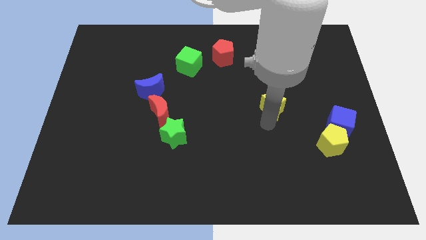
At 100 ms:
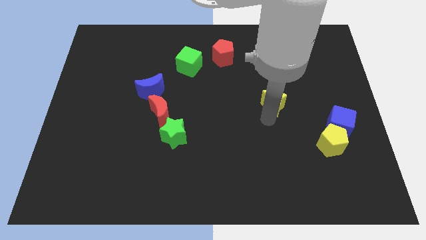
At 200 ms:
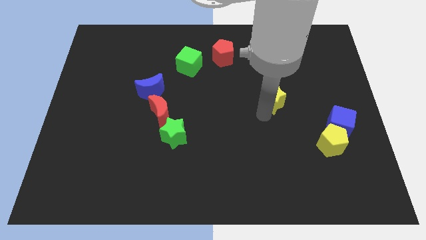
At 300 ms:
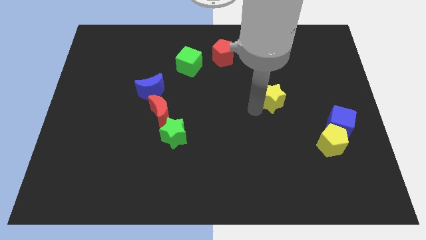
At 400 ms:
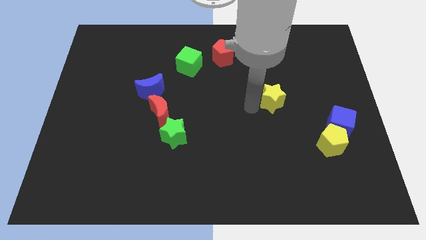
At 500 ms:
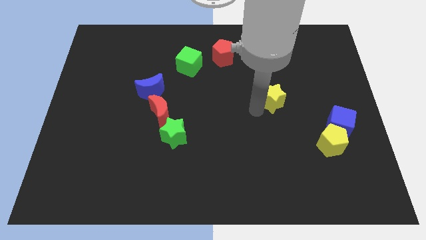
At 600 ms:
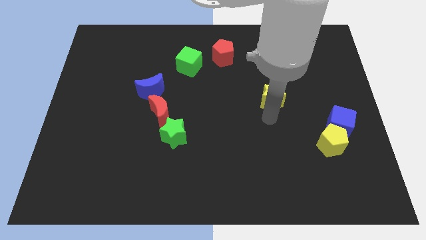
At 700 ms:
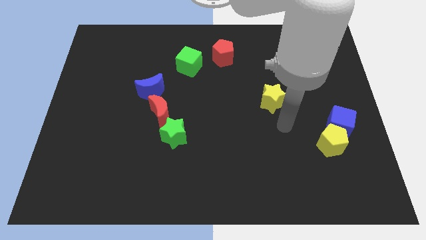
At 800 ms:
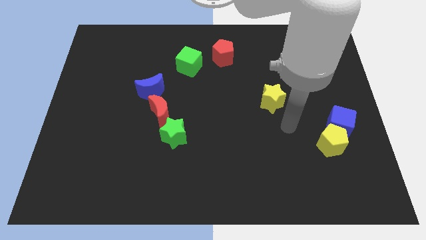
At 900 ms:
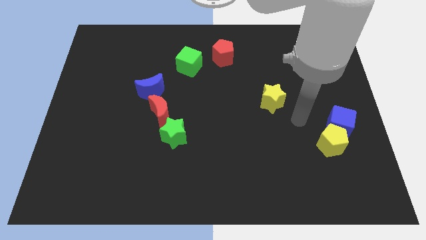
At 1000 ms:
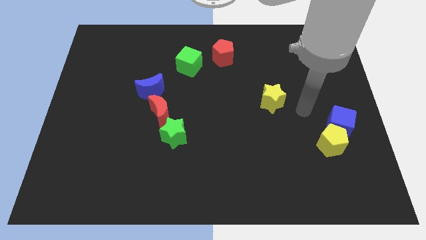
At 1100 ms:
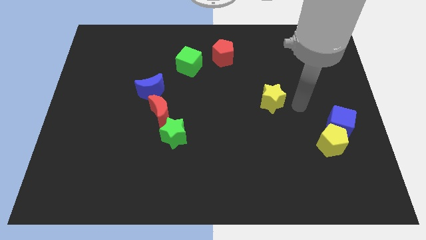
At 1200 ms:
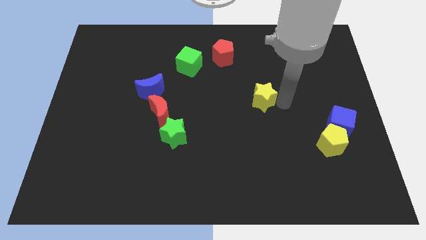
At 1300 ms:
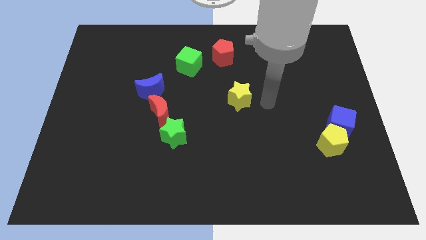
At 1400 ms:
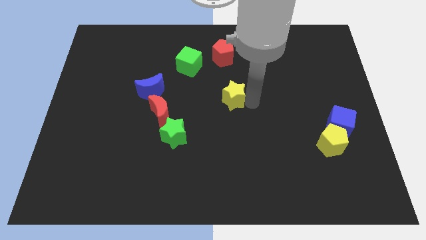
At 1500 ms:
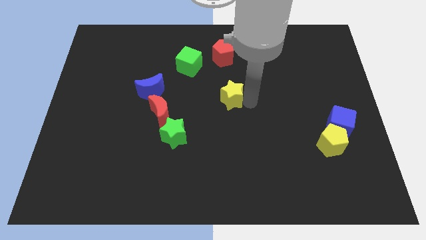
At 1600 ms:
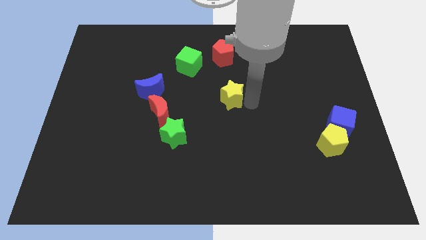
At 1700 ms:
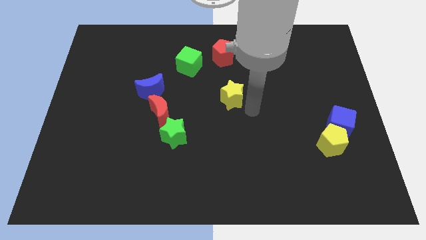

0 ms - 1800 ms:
move the yellow star to the bottom of the red pentagon

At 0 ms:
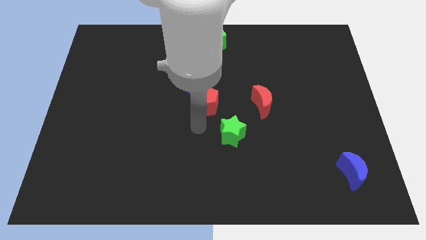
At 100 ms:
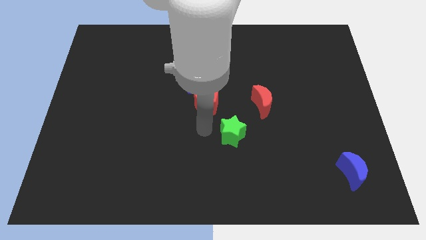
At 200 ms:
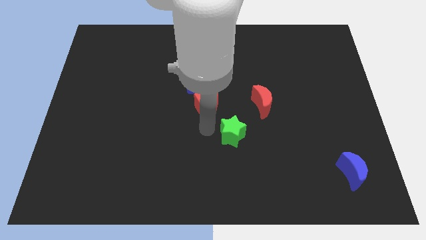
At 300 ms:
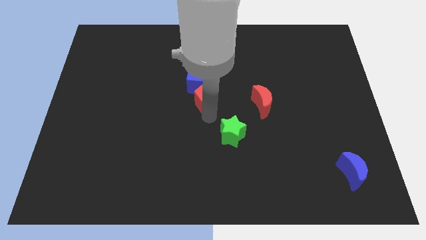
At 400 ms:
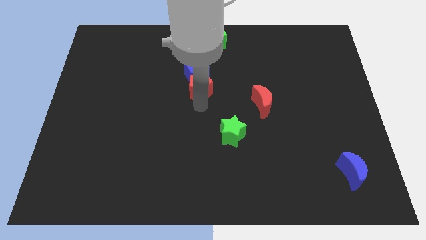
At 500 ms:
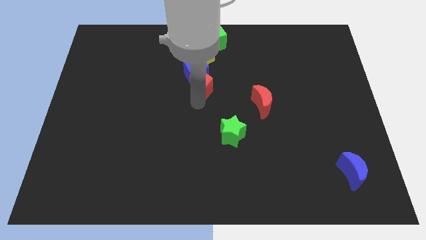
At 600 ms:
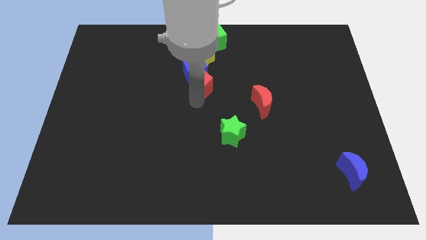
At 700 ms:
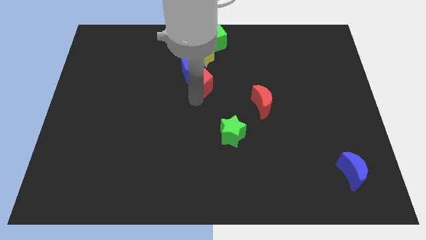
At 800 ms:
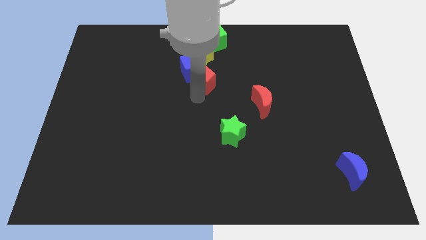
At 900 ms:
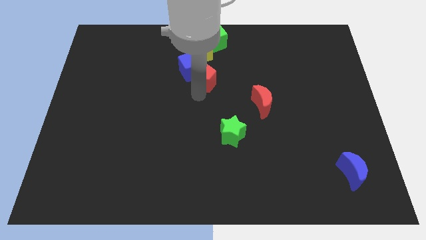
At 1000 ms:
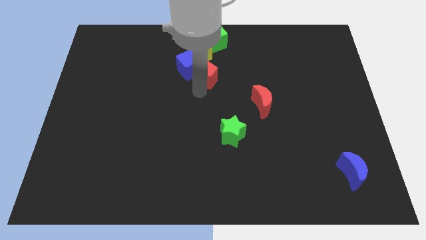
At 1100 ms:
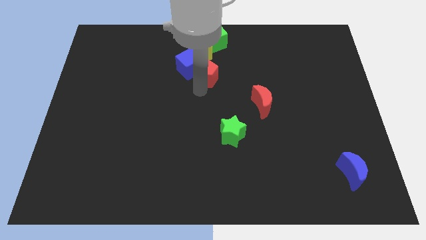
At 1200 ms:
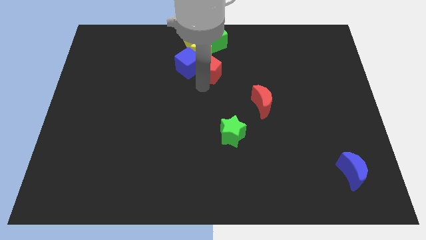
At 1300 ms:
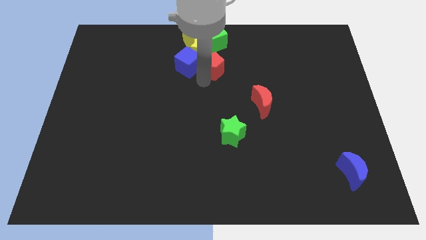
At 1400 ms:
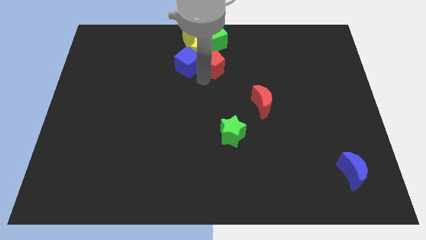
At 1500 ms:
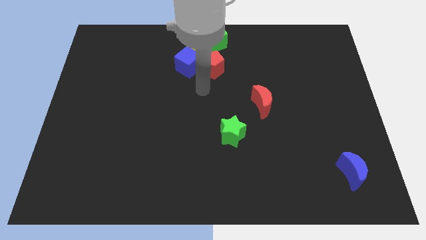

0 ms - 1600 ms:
move the red pentagon into the bottom of the yellow star

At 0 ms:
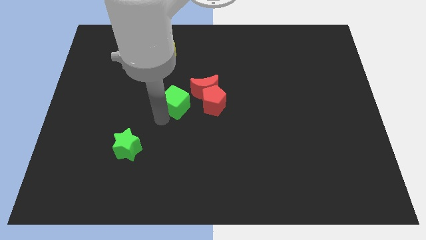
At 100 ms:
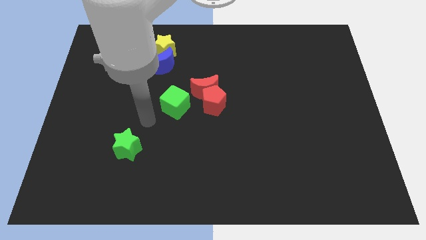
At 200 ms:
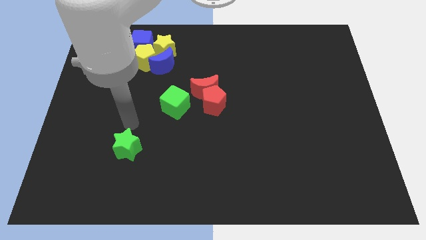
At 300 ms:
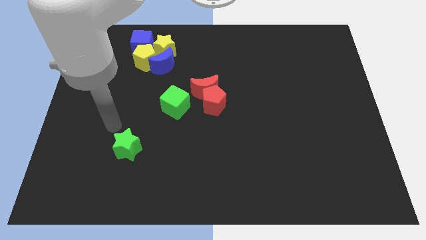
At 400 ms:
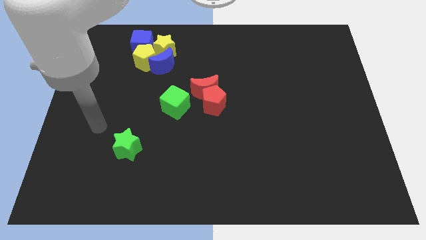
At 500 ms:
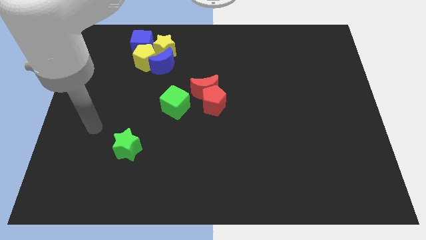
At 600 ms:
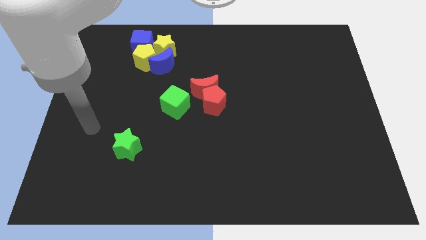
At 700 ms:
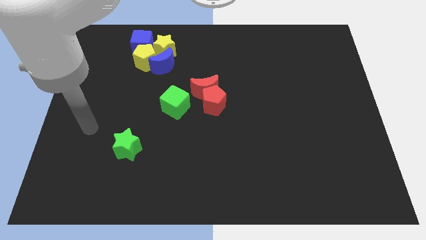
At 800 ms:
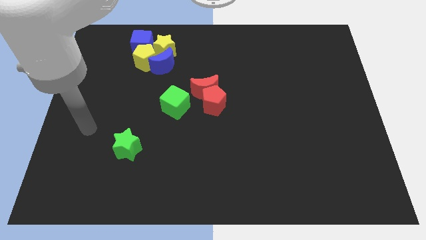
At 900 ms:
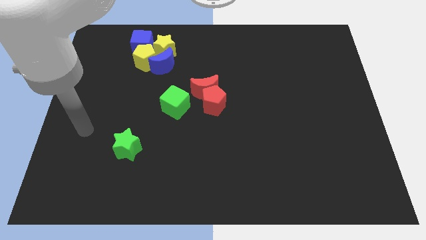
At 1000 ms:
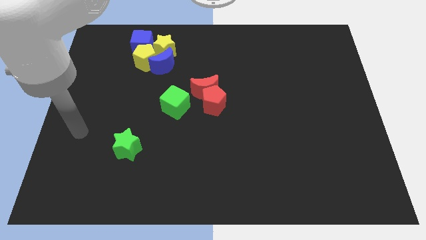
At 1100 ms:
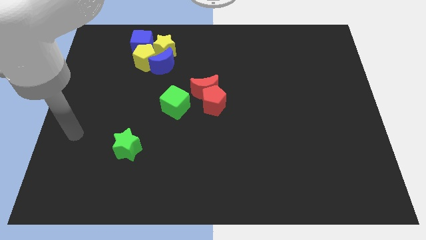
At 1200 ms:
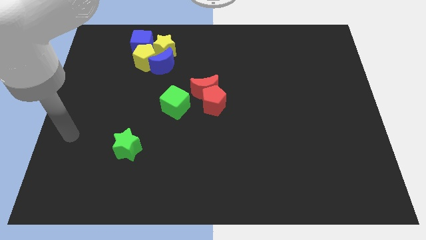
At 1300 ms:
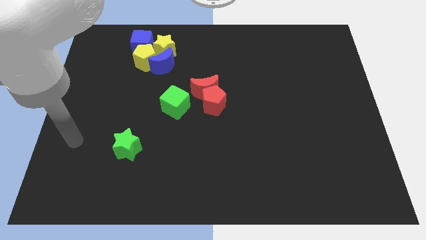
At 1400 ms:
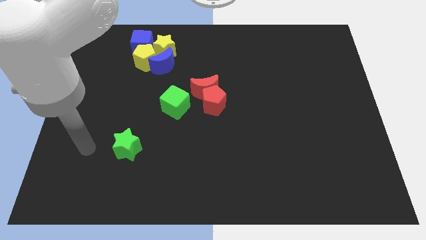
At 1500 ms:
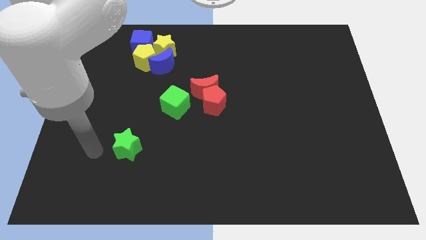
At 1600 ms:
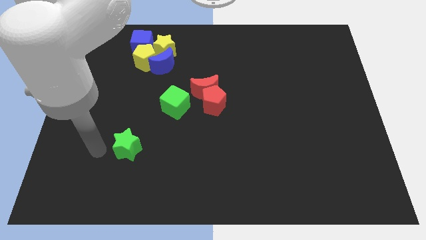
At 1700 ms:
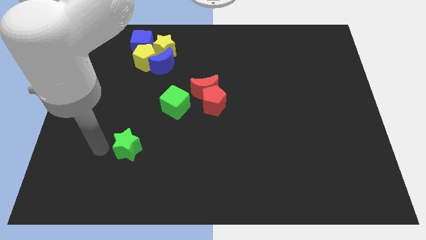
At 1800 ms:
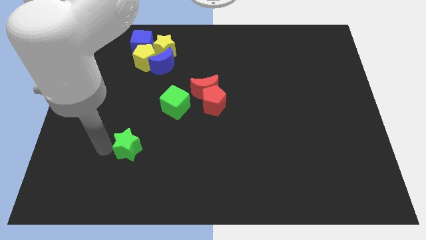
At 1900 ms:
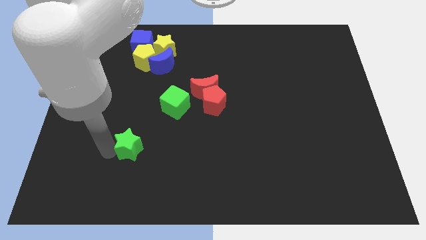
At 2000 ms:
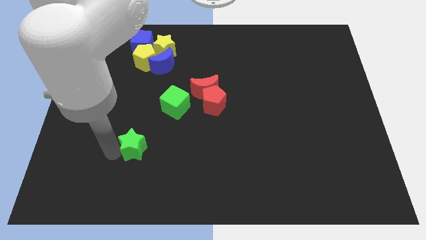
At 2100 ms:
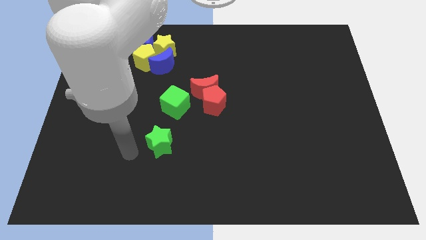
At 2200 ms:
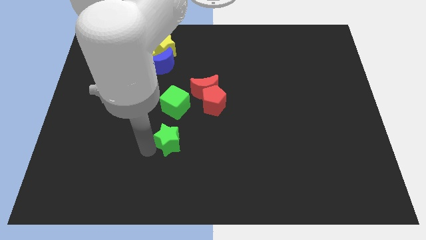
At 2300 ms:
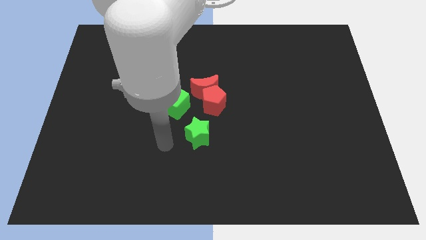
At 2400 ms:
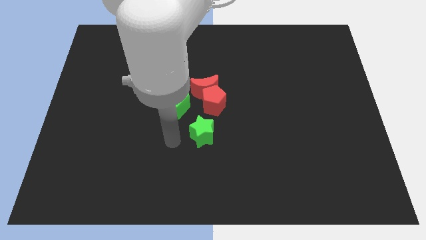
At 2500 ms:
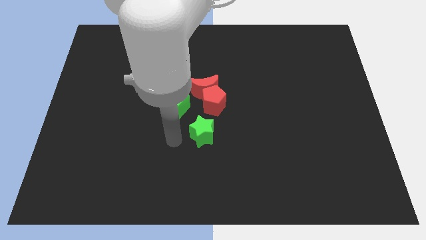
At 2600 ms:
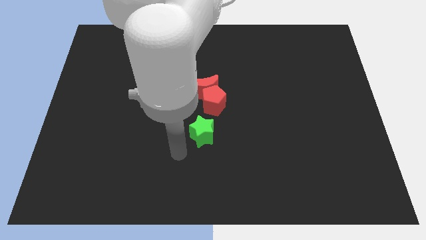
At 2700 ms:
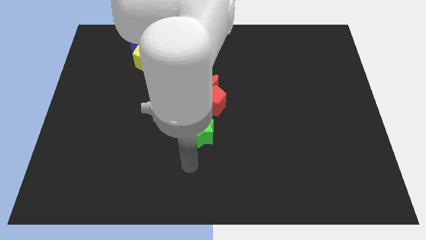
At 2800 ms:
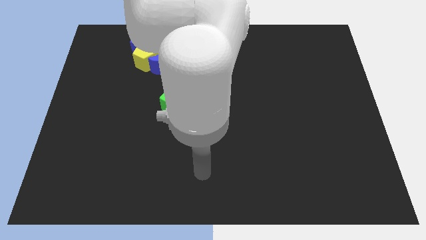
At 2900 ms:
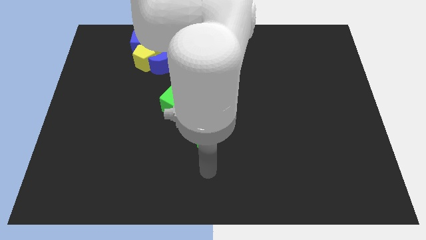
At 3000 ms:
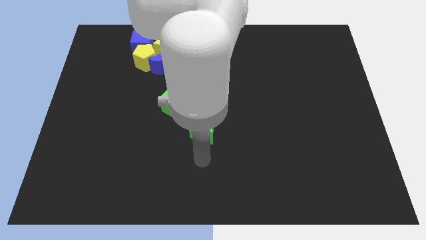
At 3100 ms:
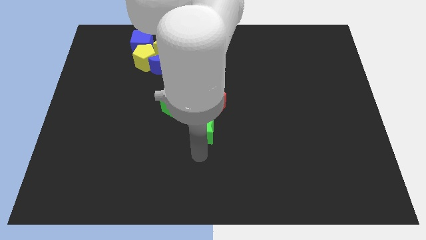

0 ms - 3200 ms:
place the green star vertically below the red pentagon

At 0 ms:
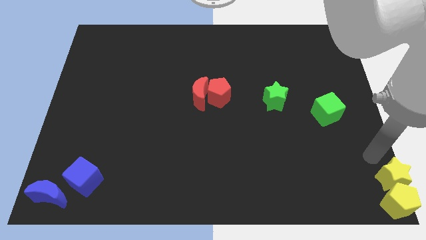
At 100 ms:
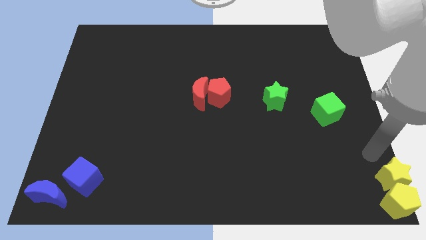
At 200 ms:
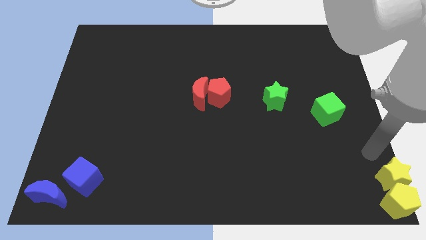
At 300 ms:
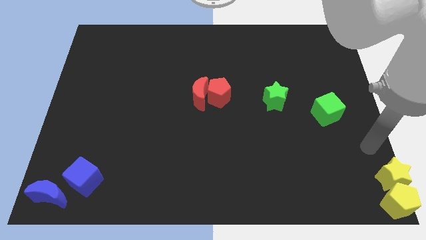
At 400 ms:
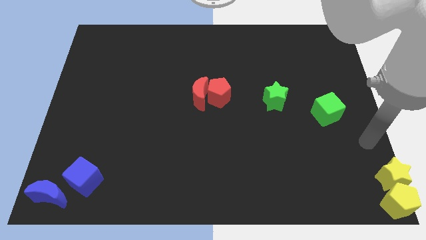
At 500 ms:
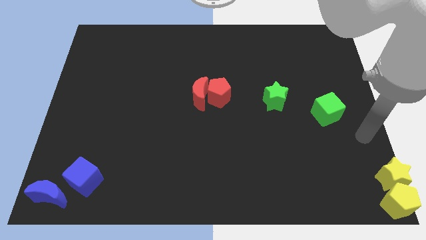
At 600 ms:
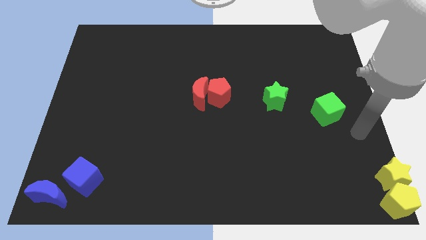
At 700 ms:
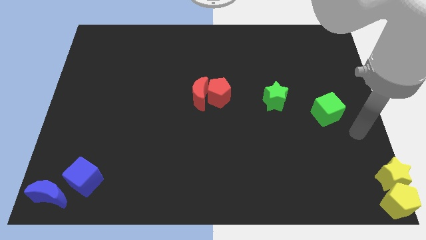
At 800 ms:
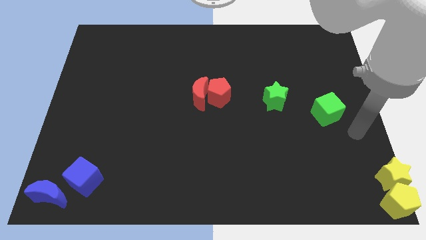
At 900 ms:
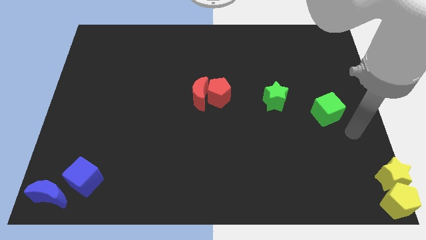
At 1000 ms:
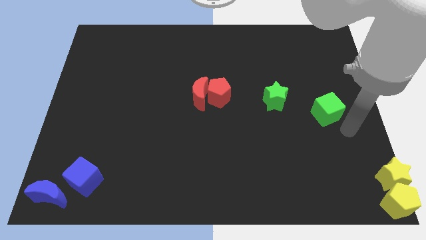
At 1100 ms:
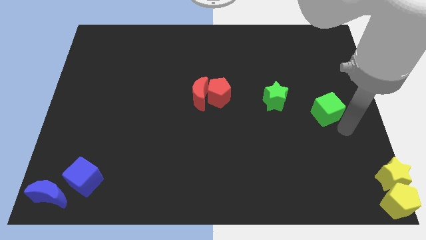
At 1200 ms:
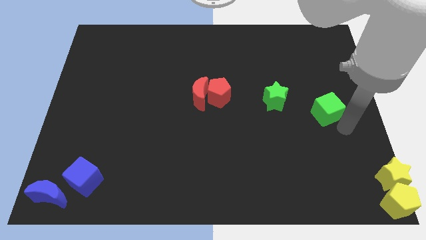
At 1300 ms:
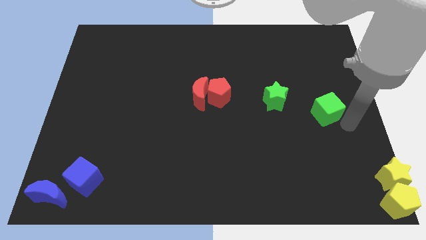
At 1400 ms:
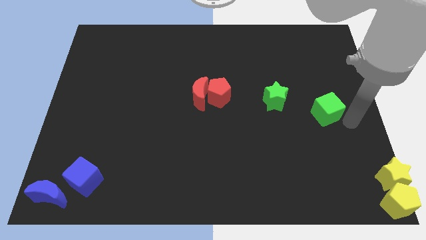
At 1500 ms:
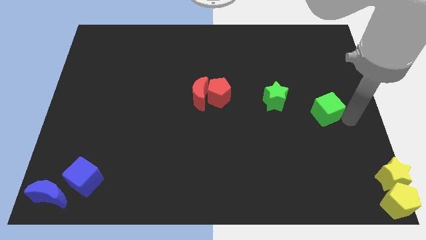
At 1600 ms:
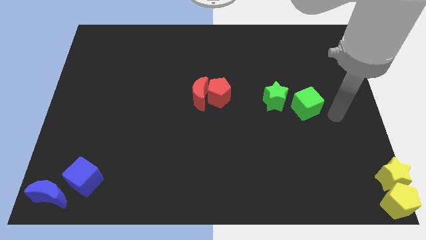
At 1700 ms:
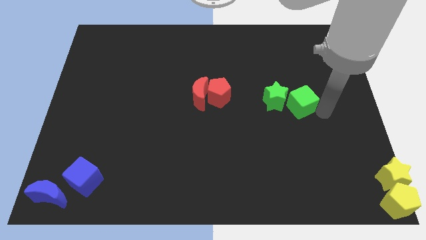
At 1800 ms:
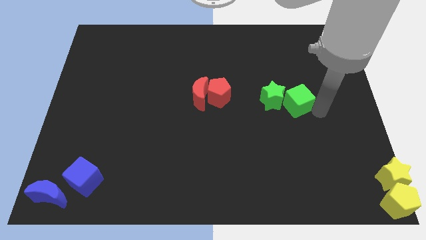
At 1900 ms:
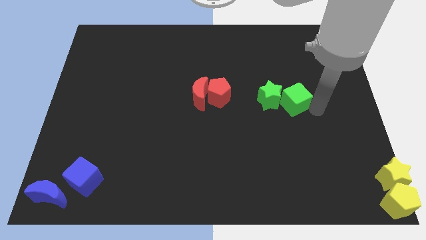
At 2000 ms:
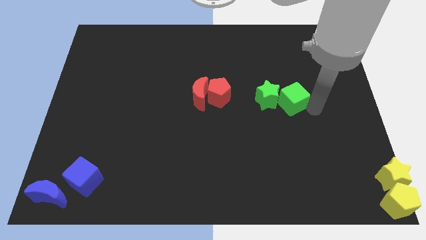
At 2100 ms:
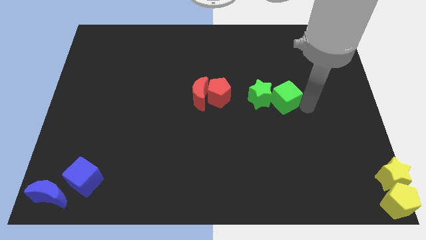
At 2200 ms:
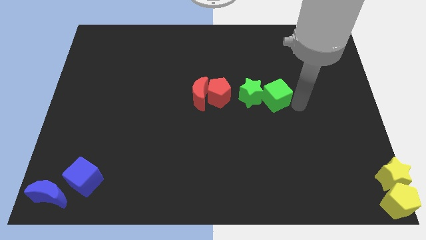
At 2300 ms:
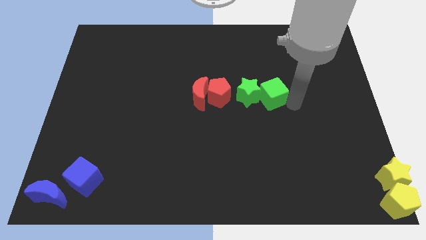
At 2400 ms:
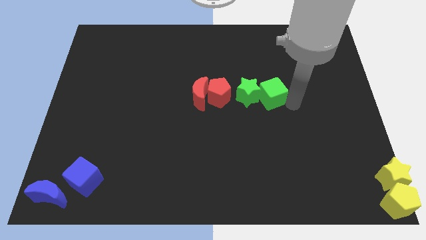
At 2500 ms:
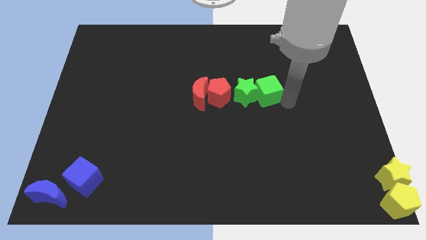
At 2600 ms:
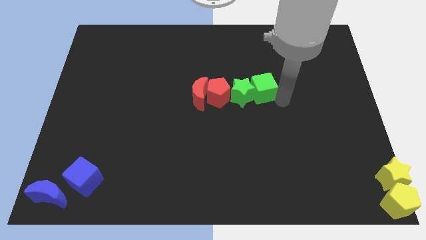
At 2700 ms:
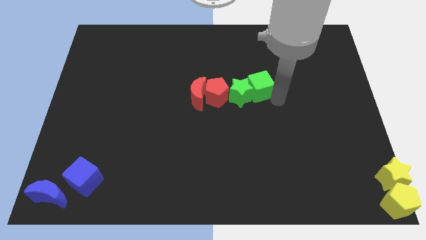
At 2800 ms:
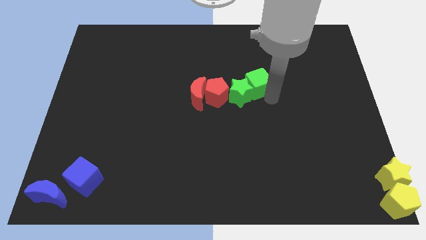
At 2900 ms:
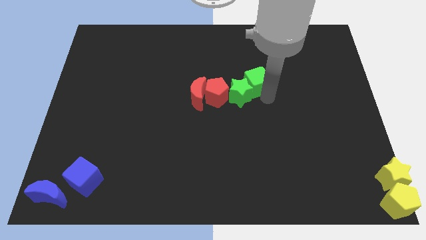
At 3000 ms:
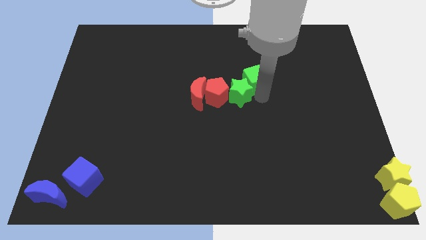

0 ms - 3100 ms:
move green star and green cube into red pentagon
